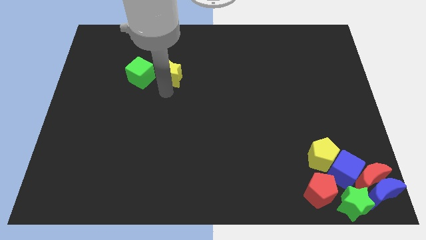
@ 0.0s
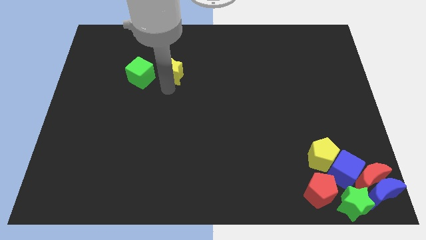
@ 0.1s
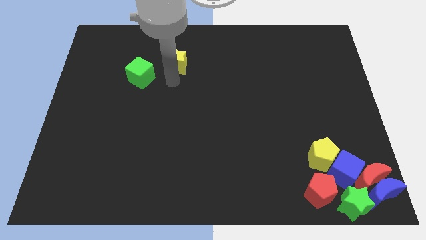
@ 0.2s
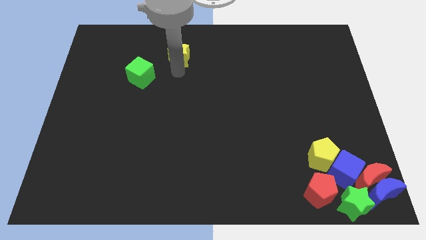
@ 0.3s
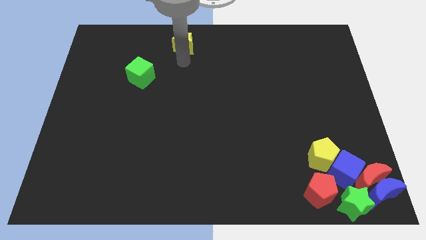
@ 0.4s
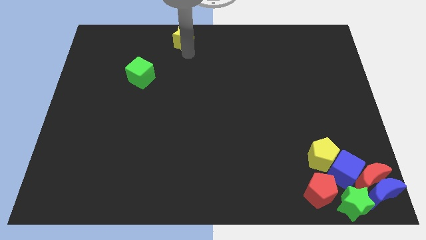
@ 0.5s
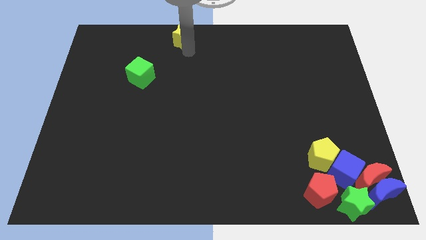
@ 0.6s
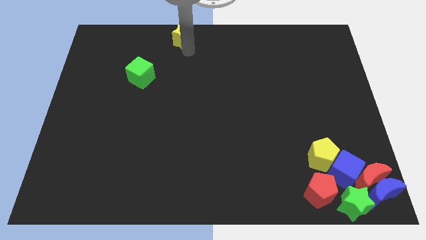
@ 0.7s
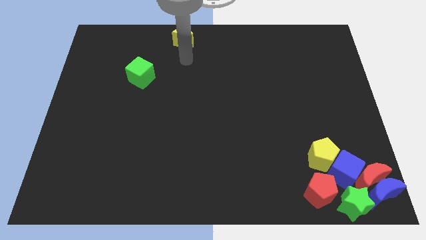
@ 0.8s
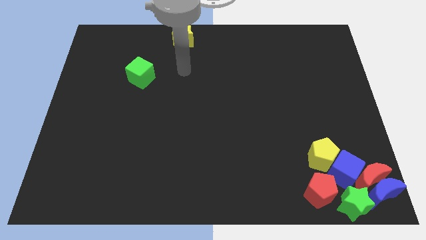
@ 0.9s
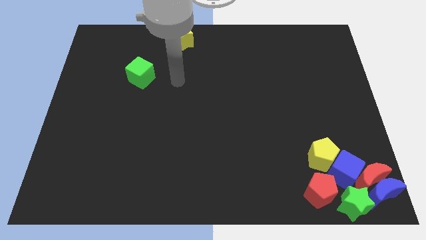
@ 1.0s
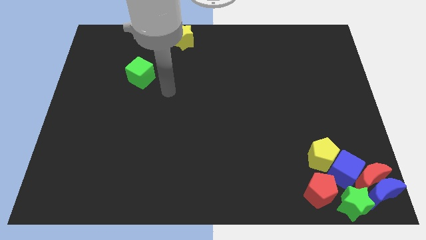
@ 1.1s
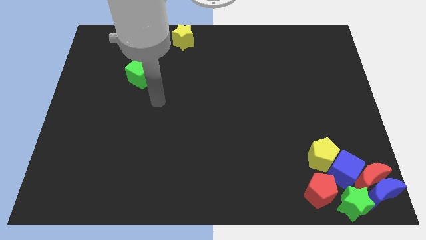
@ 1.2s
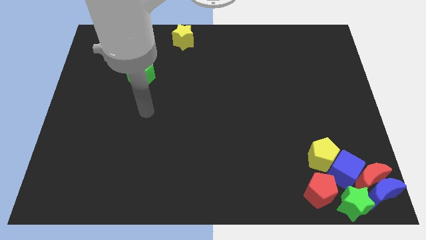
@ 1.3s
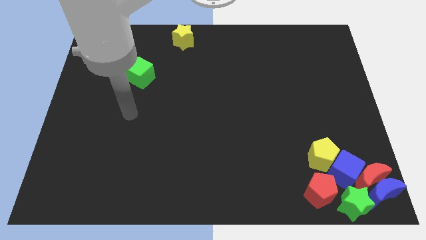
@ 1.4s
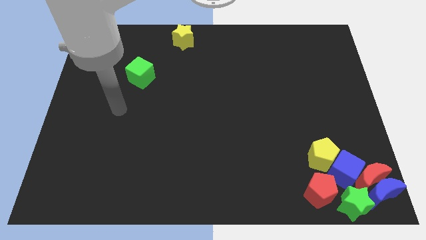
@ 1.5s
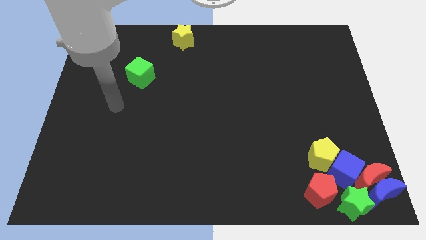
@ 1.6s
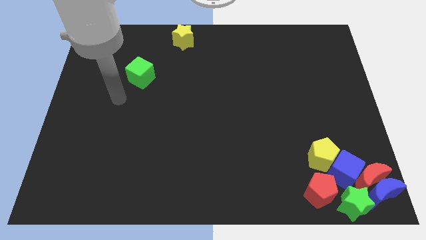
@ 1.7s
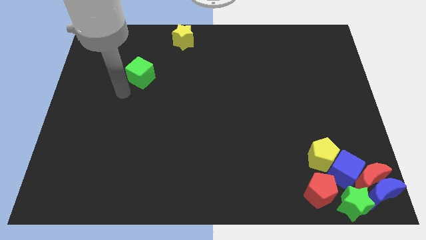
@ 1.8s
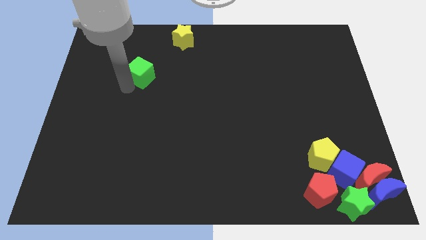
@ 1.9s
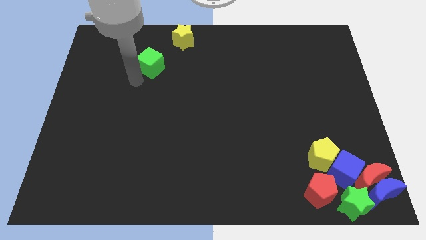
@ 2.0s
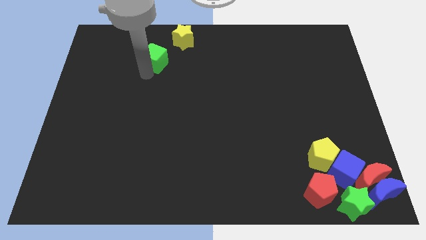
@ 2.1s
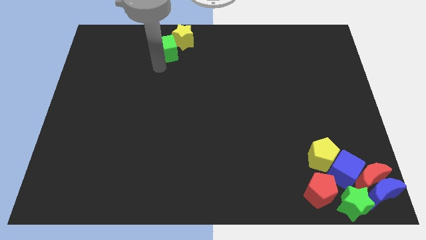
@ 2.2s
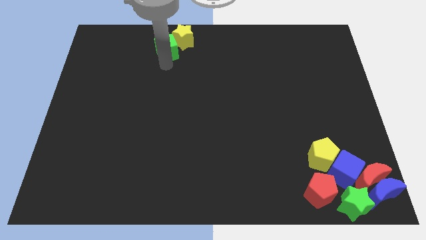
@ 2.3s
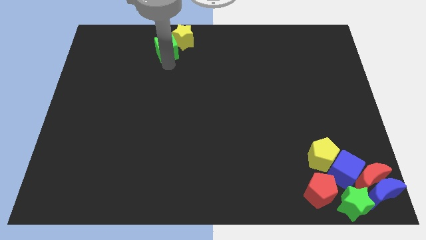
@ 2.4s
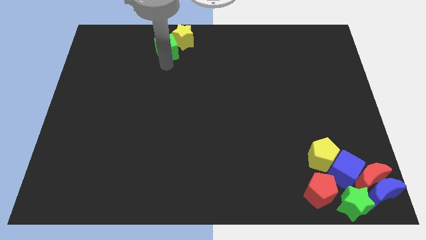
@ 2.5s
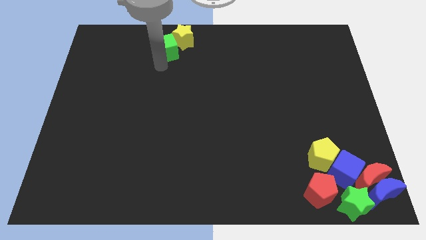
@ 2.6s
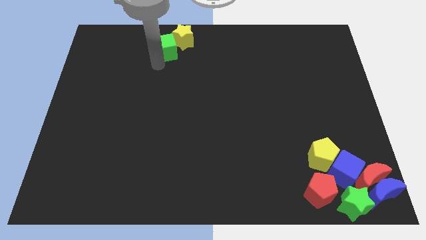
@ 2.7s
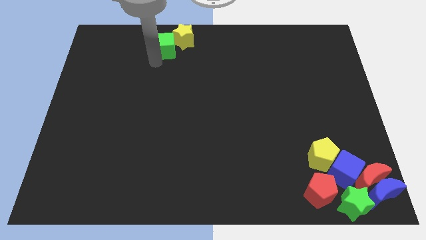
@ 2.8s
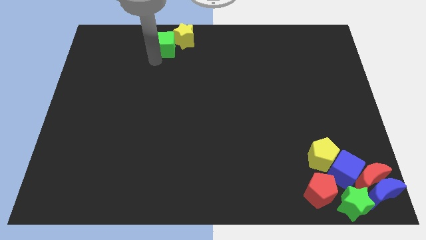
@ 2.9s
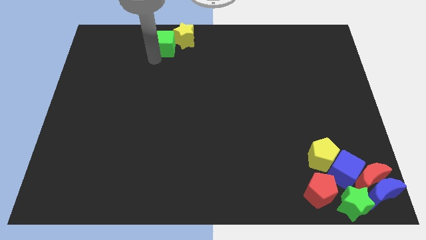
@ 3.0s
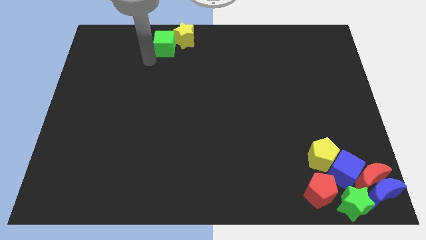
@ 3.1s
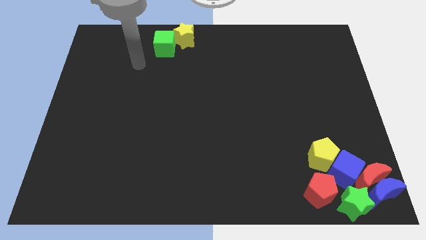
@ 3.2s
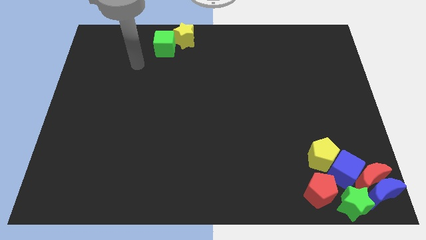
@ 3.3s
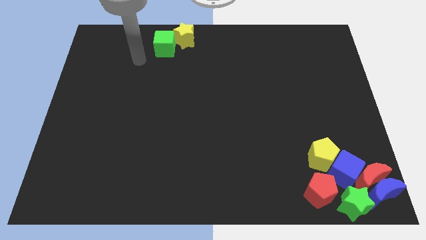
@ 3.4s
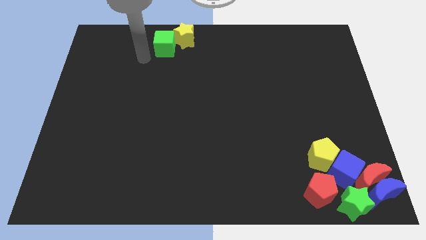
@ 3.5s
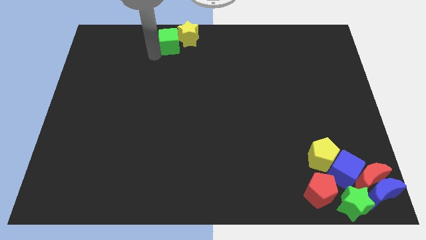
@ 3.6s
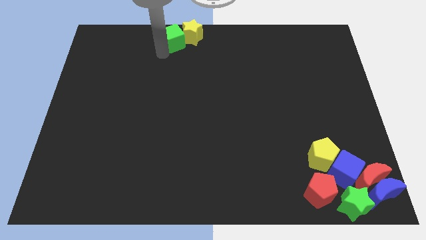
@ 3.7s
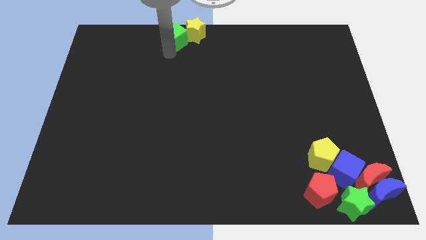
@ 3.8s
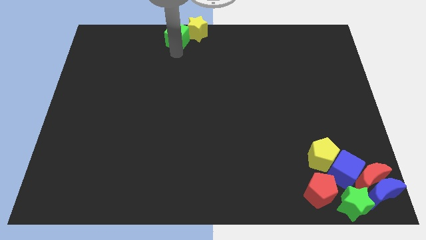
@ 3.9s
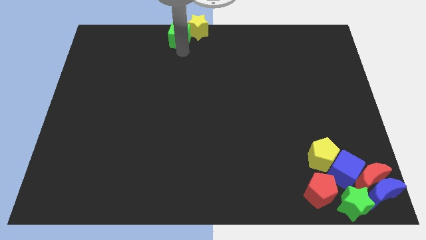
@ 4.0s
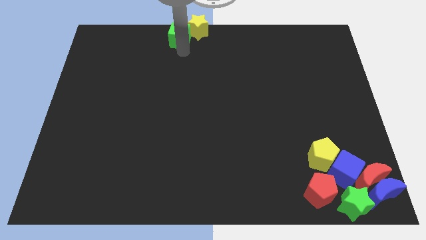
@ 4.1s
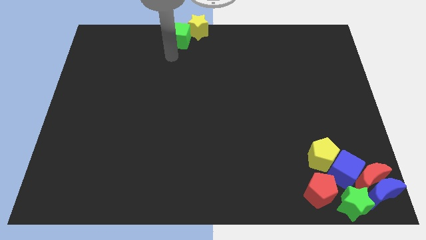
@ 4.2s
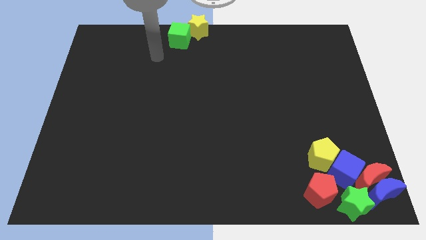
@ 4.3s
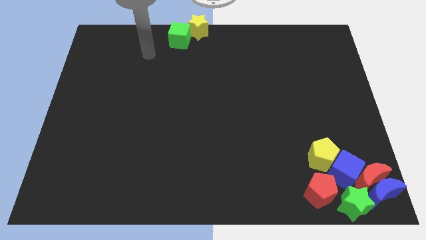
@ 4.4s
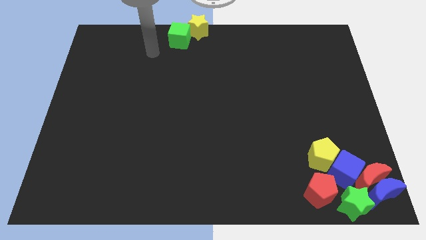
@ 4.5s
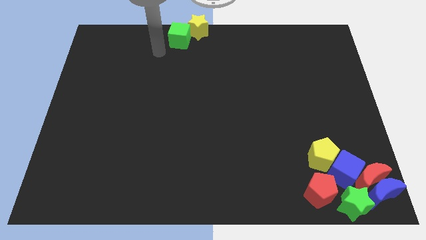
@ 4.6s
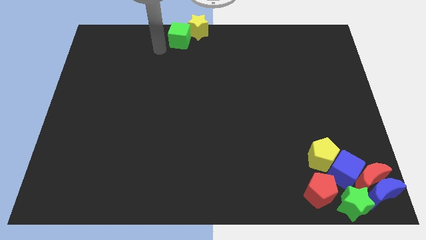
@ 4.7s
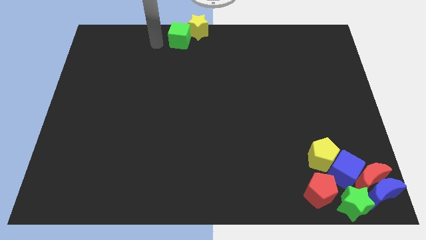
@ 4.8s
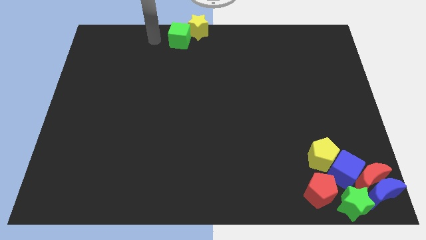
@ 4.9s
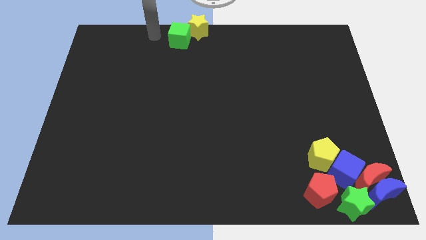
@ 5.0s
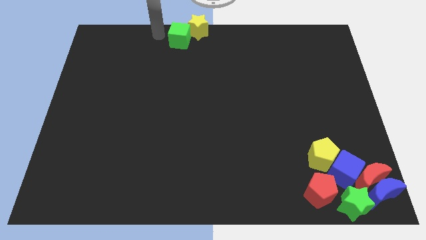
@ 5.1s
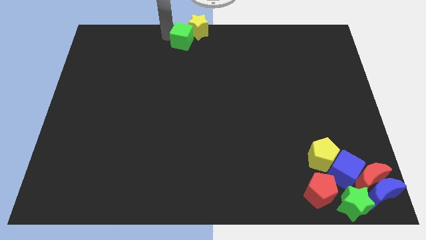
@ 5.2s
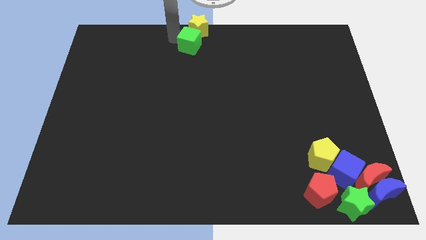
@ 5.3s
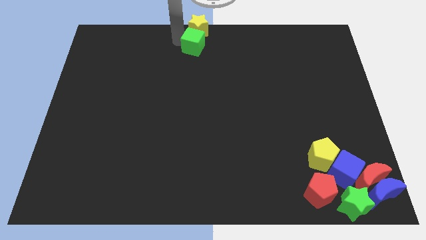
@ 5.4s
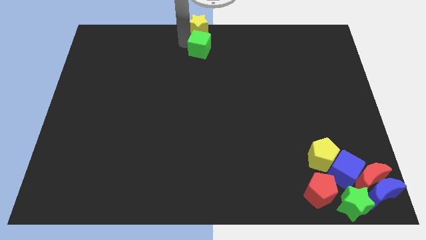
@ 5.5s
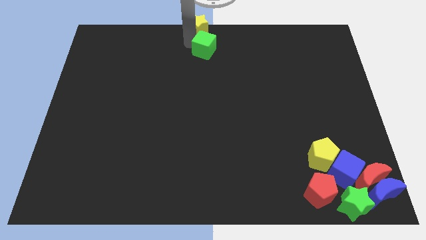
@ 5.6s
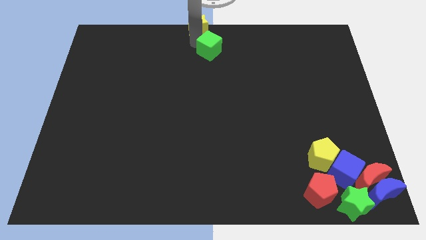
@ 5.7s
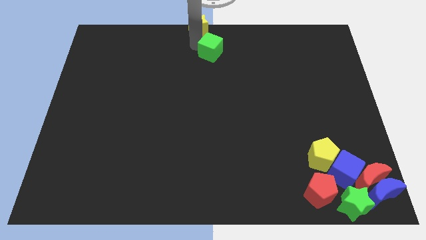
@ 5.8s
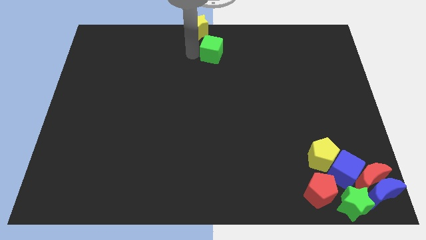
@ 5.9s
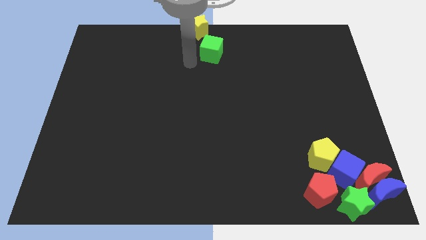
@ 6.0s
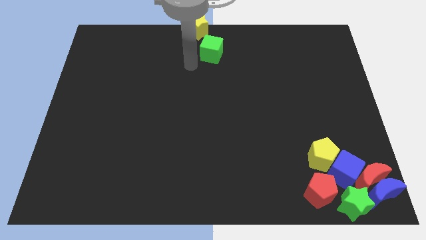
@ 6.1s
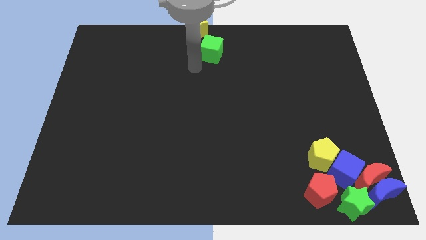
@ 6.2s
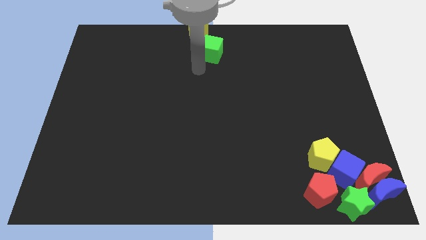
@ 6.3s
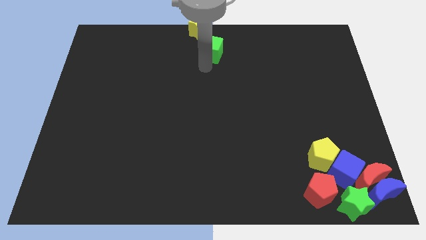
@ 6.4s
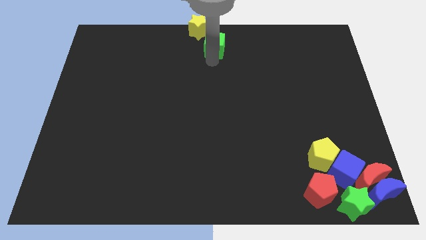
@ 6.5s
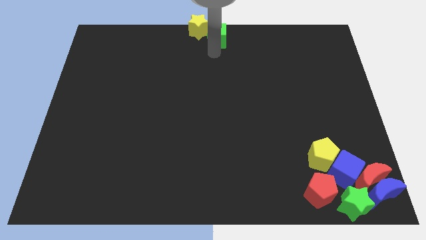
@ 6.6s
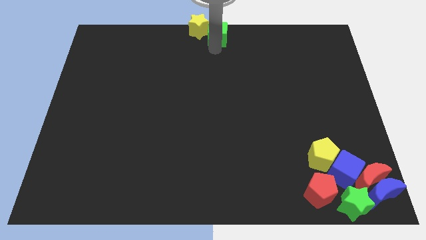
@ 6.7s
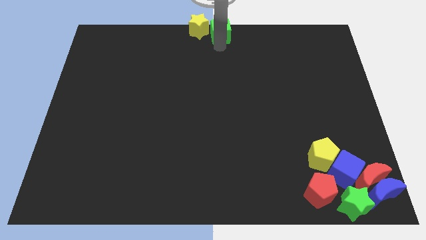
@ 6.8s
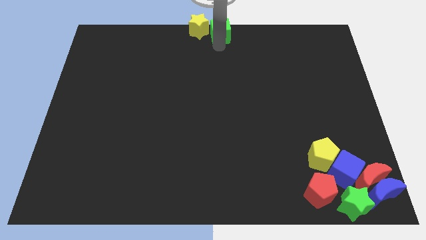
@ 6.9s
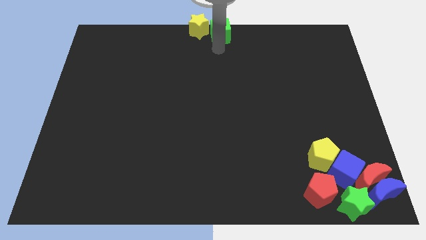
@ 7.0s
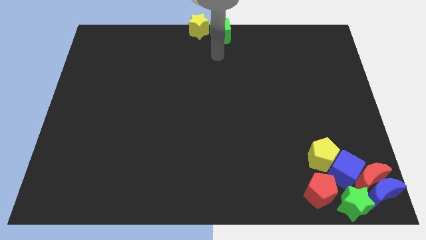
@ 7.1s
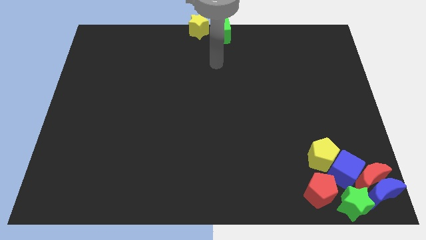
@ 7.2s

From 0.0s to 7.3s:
place green cube and yellow star together at the top center of the board

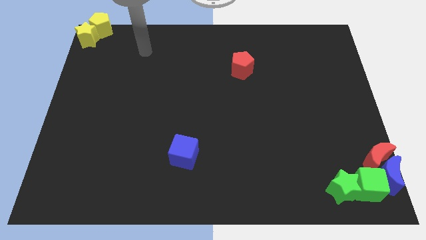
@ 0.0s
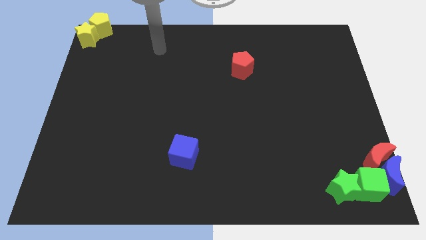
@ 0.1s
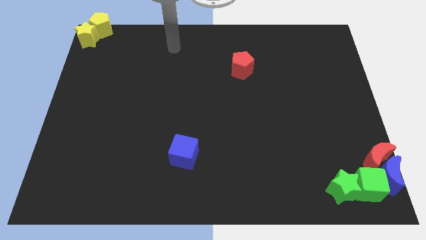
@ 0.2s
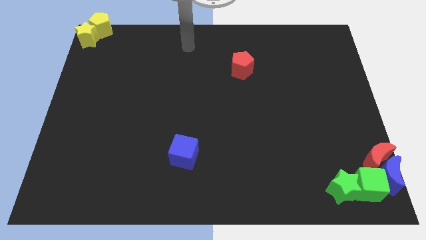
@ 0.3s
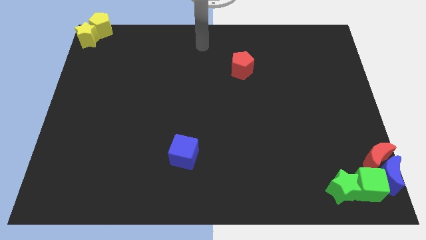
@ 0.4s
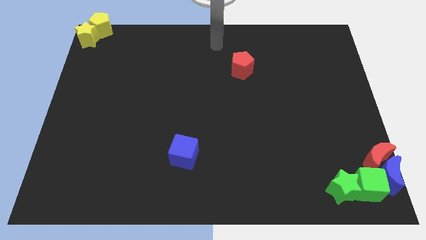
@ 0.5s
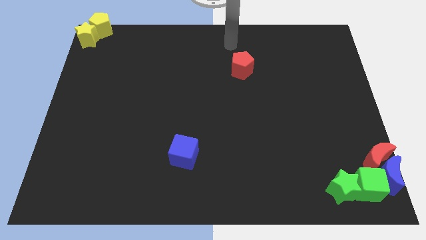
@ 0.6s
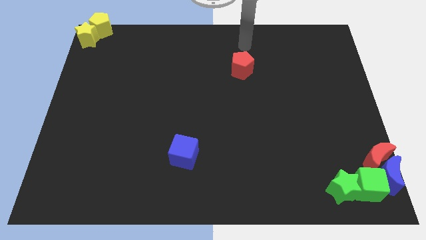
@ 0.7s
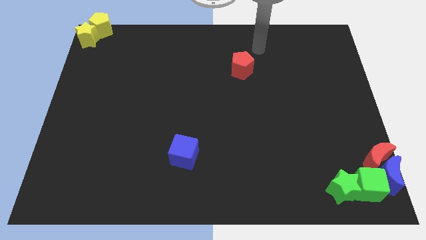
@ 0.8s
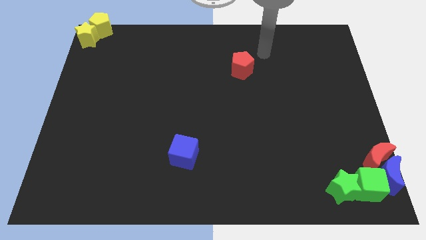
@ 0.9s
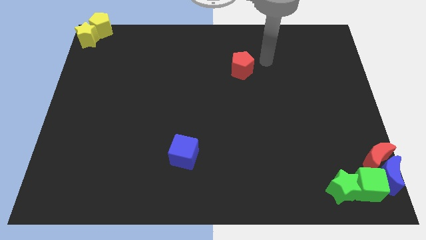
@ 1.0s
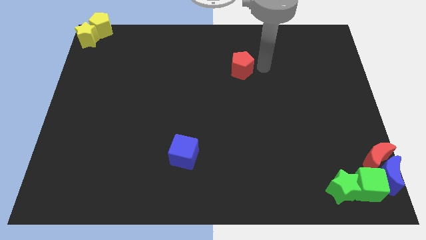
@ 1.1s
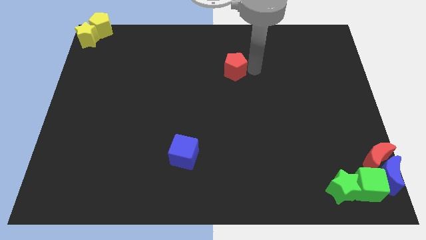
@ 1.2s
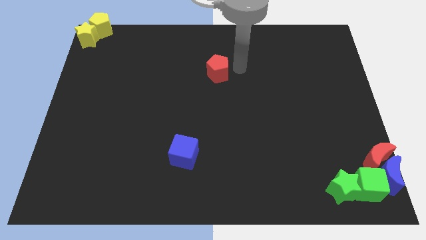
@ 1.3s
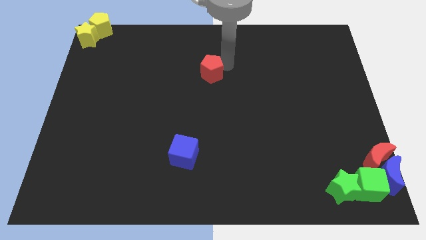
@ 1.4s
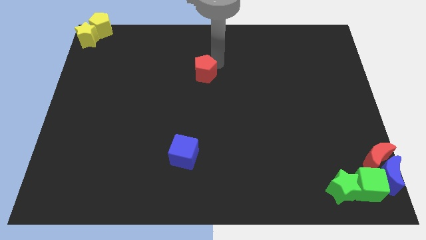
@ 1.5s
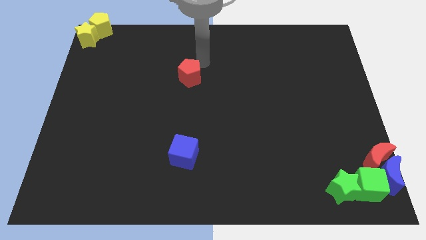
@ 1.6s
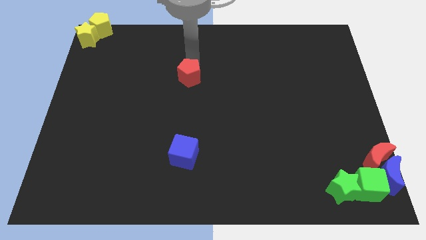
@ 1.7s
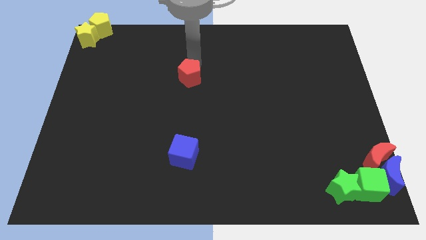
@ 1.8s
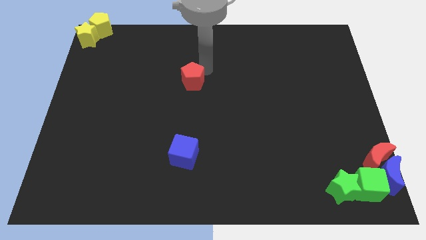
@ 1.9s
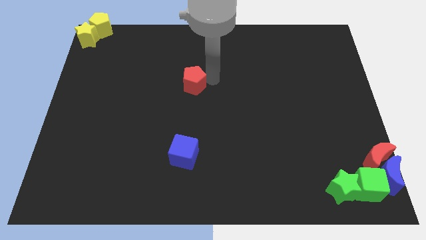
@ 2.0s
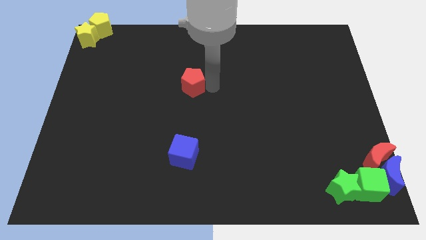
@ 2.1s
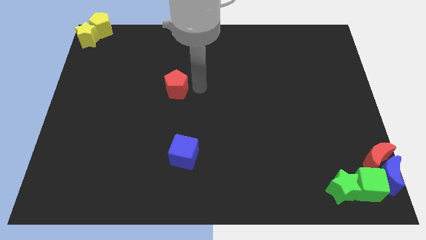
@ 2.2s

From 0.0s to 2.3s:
place red pentagon vertically above the blue cube
